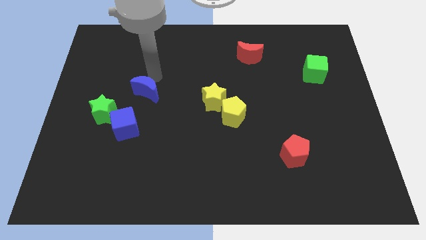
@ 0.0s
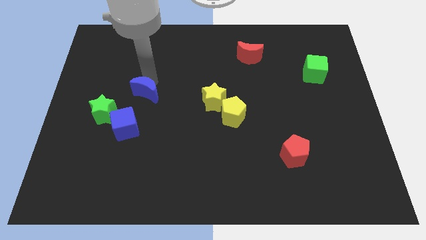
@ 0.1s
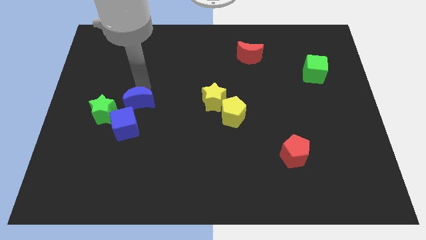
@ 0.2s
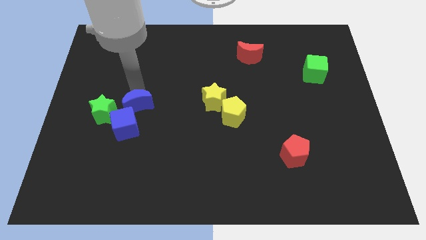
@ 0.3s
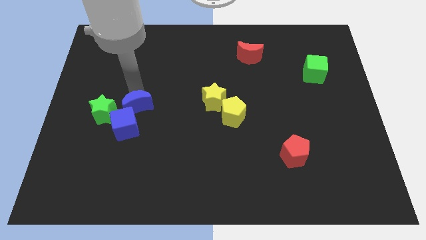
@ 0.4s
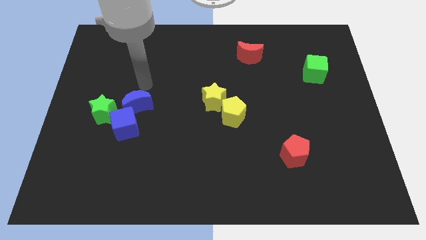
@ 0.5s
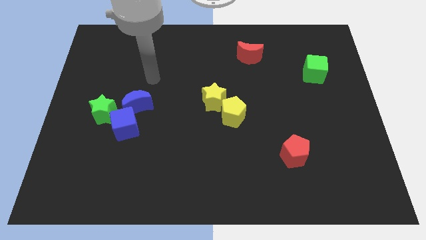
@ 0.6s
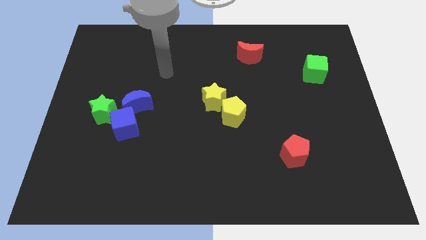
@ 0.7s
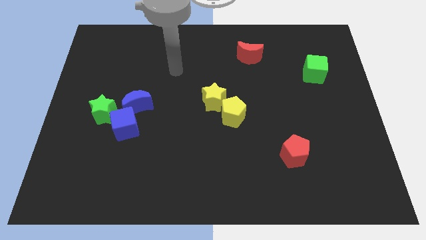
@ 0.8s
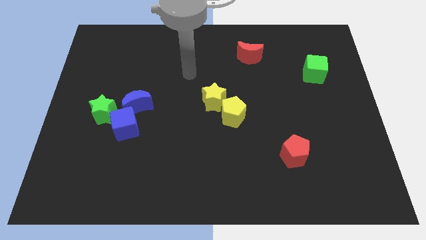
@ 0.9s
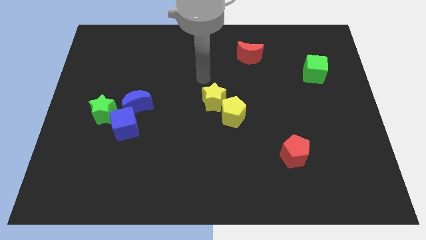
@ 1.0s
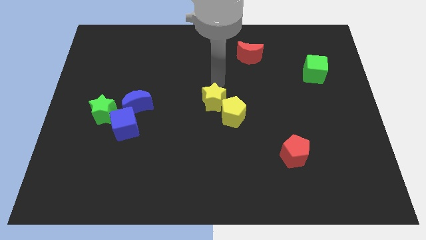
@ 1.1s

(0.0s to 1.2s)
slide the blue moon into the blue cube

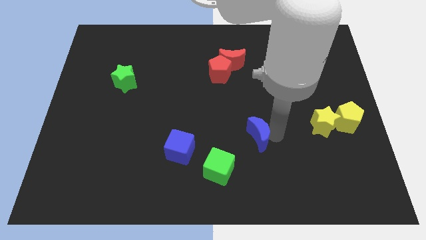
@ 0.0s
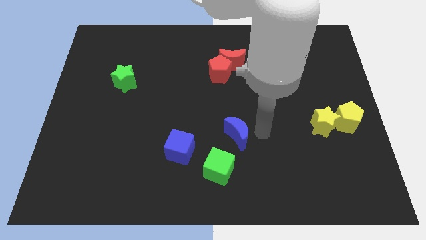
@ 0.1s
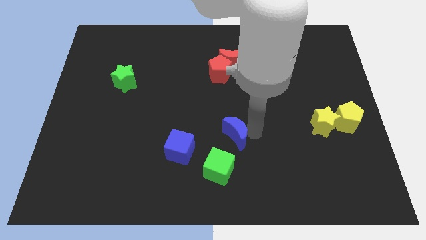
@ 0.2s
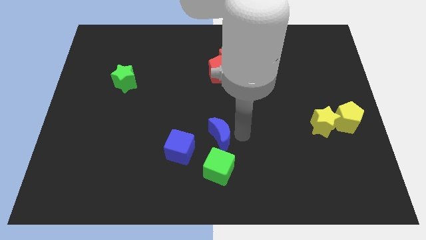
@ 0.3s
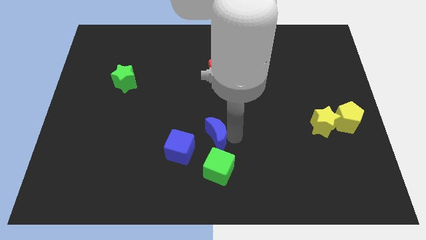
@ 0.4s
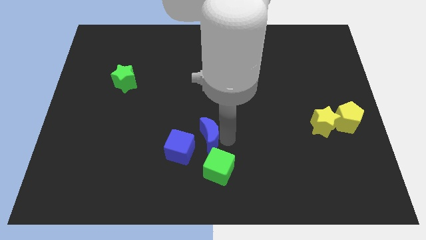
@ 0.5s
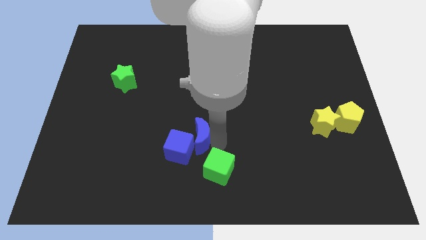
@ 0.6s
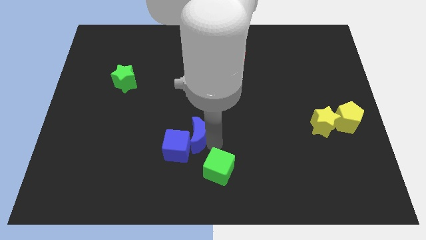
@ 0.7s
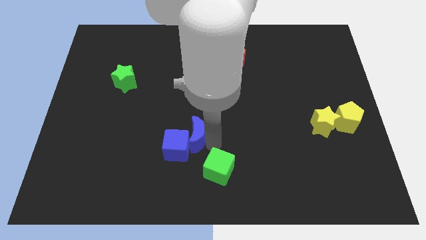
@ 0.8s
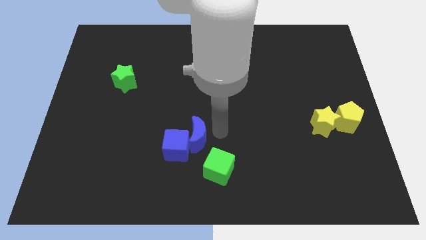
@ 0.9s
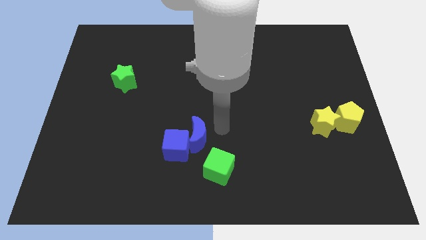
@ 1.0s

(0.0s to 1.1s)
move the blue crescent to the blue cube

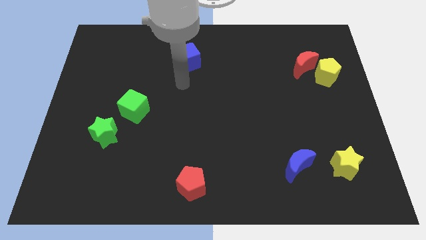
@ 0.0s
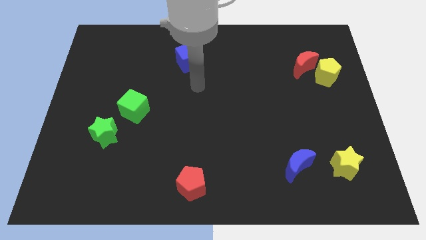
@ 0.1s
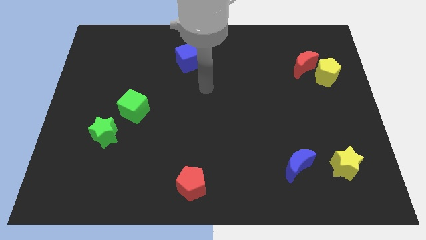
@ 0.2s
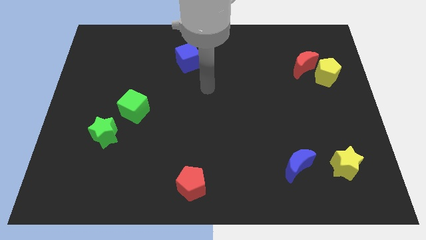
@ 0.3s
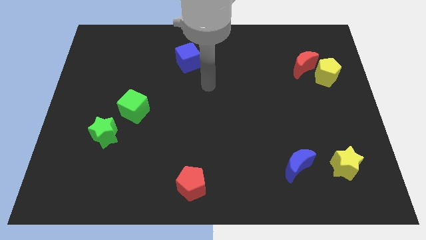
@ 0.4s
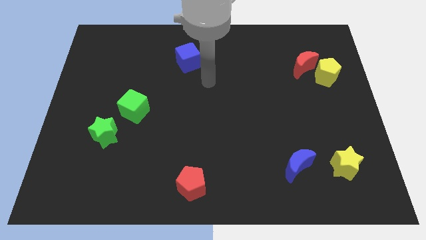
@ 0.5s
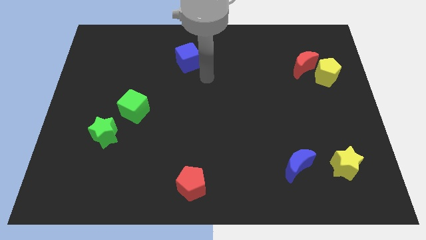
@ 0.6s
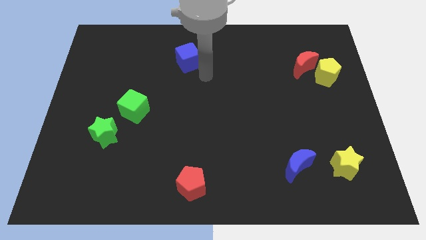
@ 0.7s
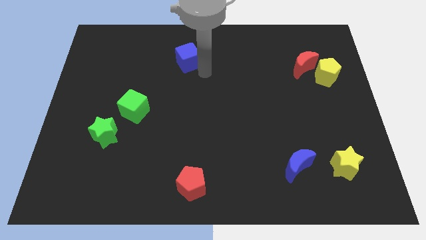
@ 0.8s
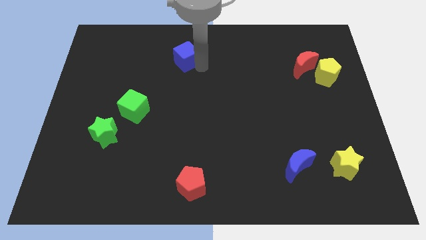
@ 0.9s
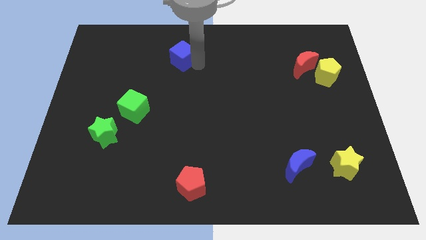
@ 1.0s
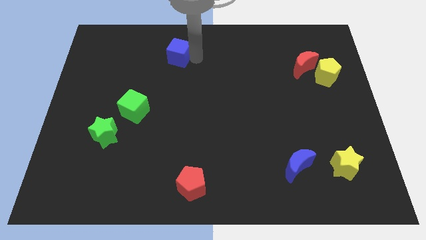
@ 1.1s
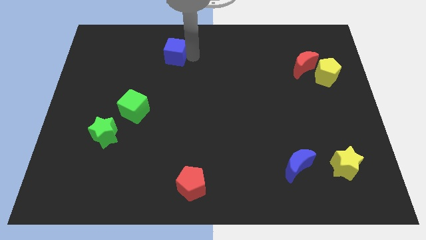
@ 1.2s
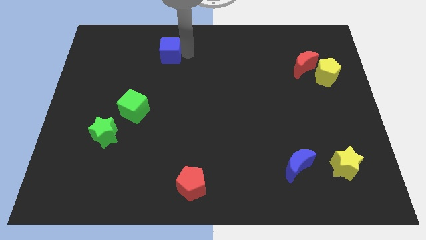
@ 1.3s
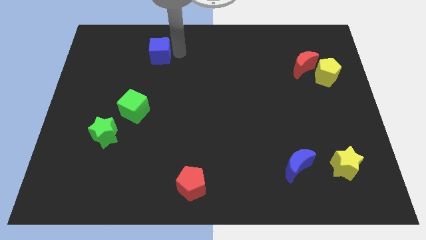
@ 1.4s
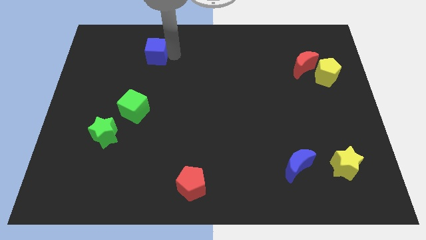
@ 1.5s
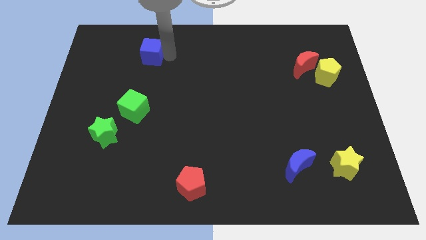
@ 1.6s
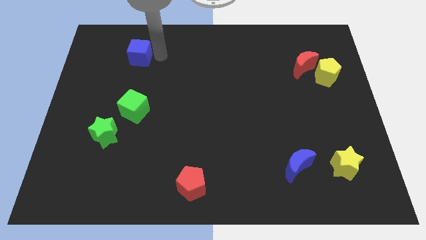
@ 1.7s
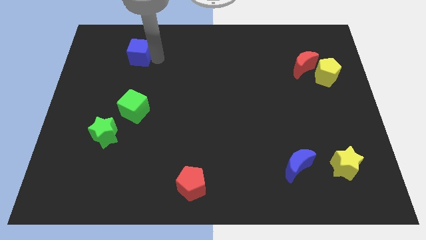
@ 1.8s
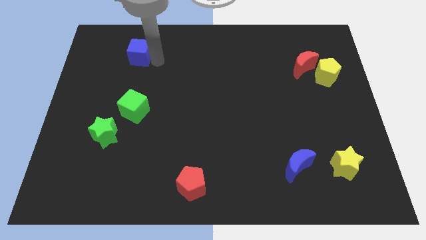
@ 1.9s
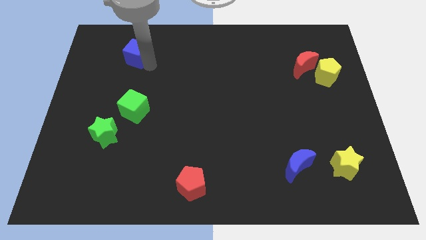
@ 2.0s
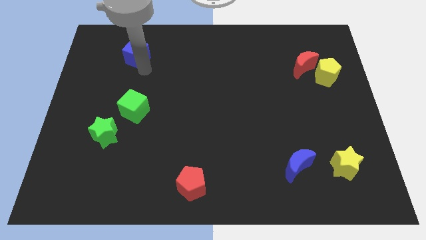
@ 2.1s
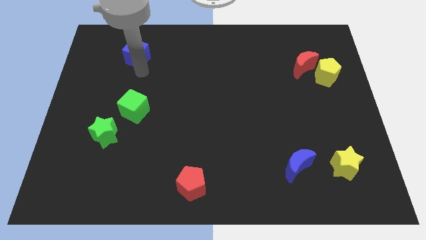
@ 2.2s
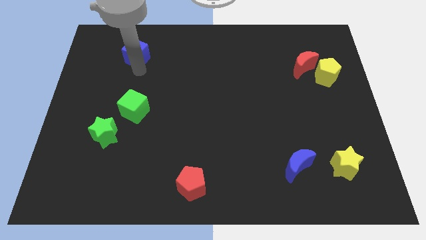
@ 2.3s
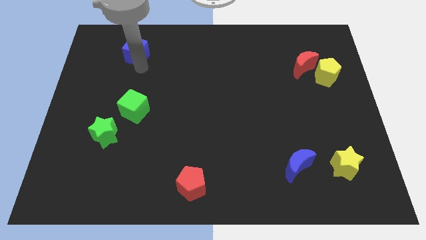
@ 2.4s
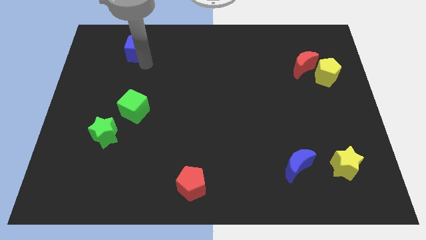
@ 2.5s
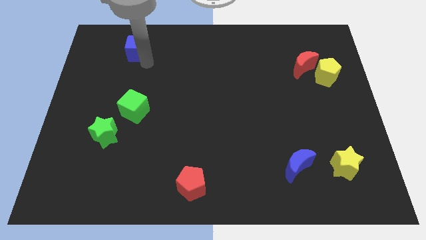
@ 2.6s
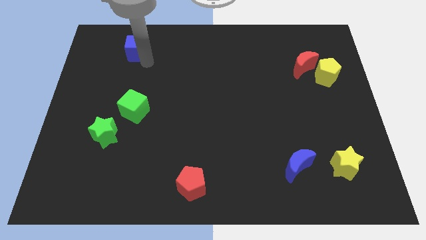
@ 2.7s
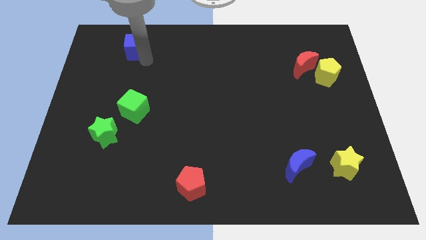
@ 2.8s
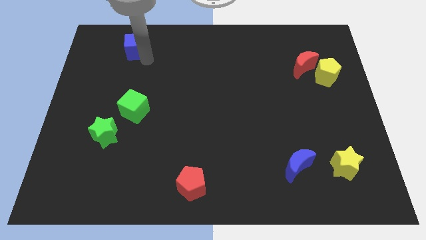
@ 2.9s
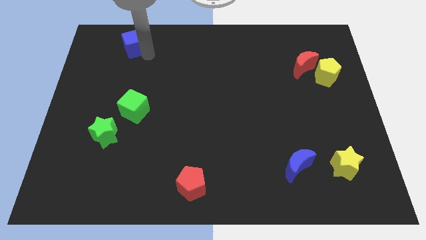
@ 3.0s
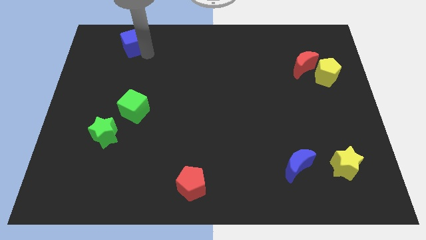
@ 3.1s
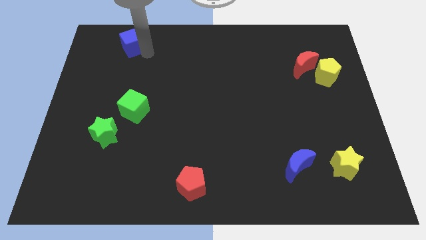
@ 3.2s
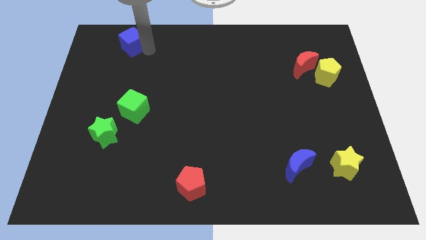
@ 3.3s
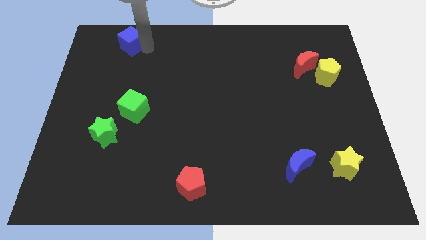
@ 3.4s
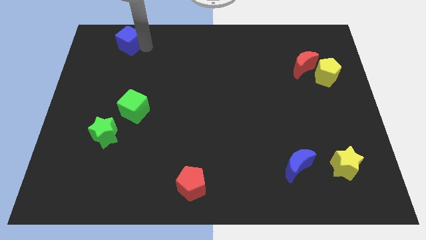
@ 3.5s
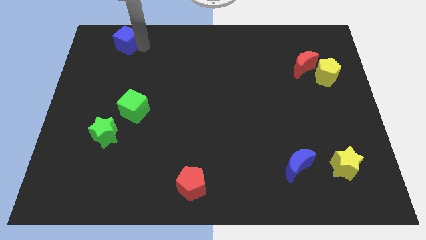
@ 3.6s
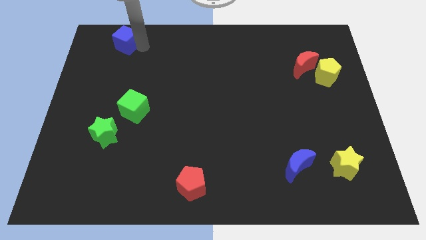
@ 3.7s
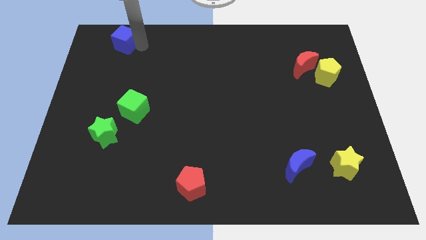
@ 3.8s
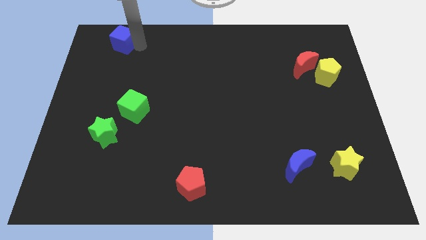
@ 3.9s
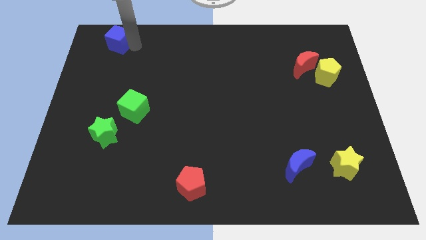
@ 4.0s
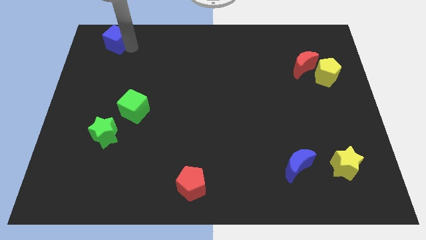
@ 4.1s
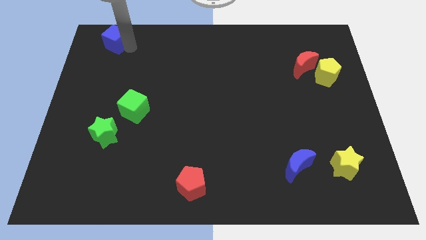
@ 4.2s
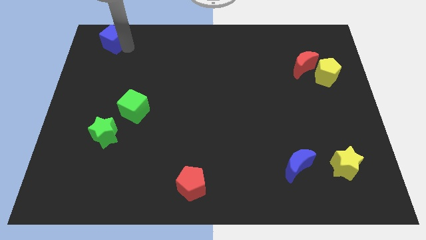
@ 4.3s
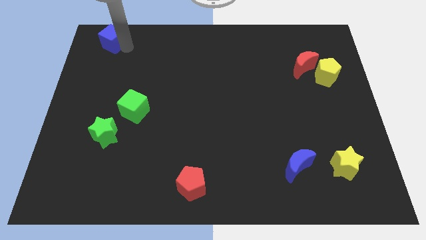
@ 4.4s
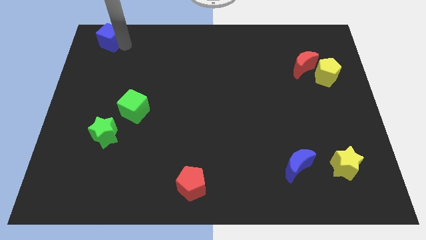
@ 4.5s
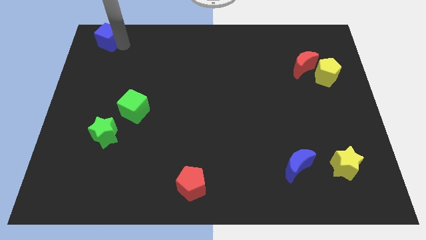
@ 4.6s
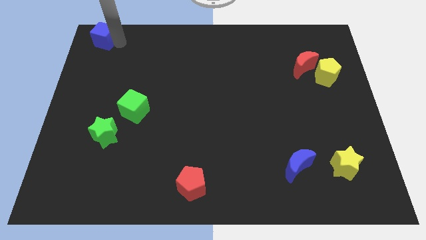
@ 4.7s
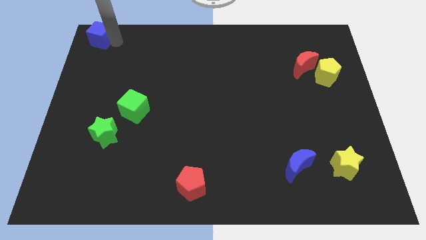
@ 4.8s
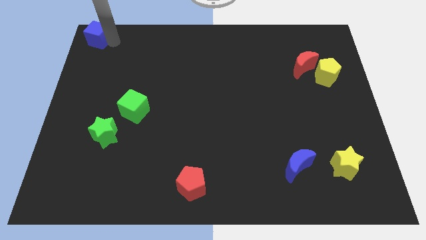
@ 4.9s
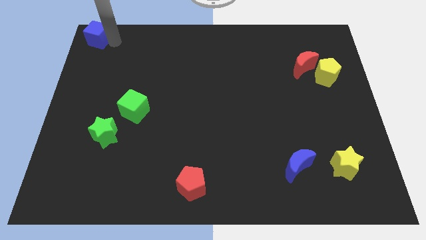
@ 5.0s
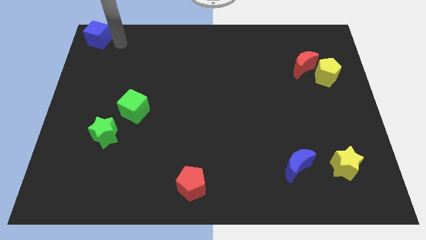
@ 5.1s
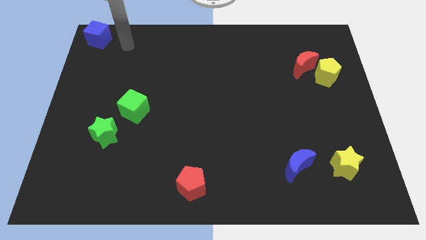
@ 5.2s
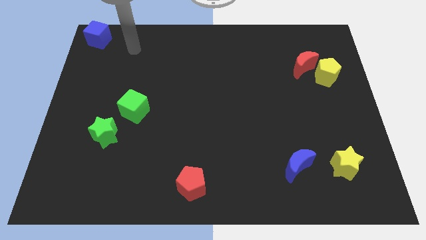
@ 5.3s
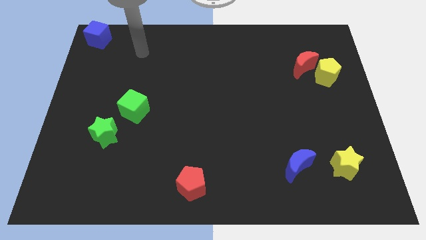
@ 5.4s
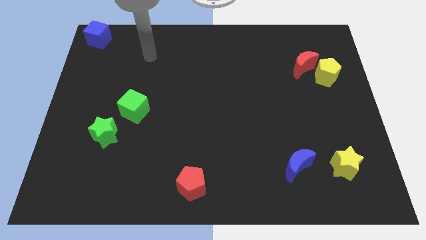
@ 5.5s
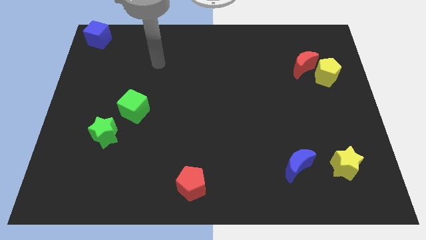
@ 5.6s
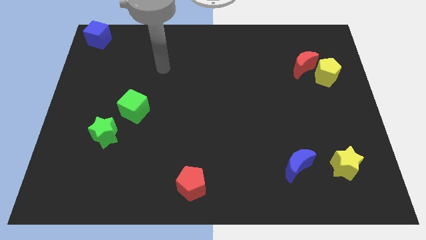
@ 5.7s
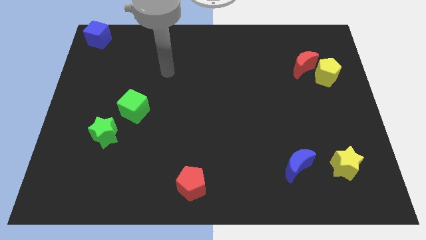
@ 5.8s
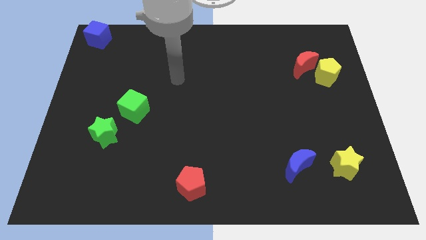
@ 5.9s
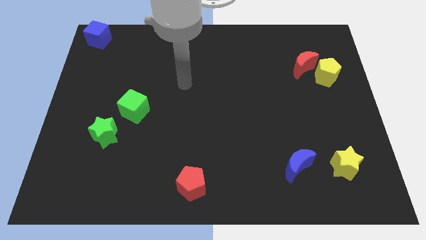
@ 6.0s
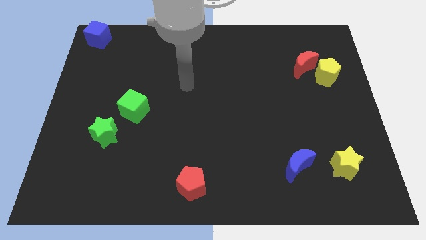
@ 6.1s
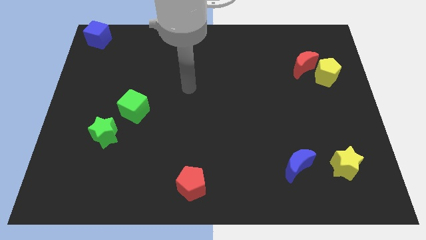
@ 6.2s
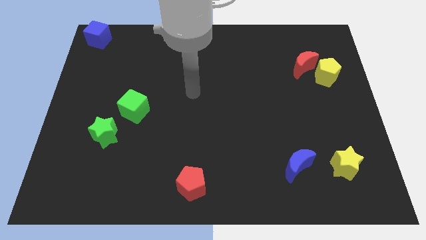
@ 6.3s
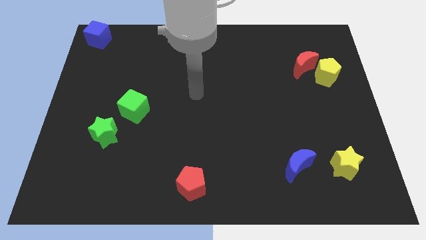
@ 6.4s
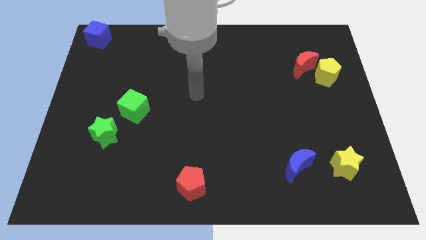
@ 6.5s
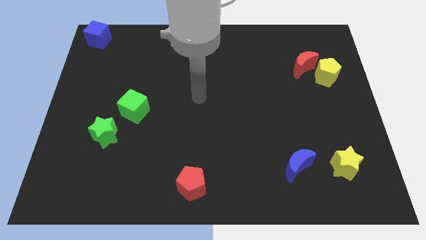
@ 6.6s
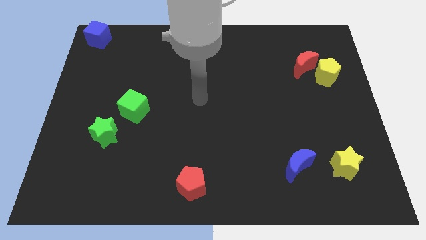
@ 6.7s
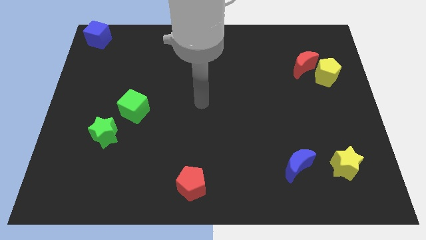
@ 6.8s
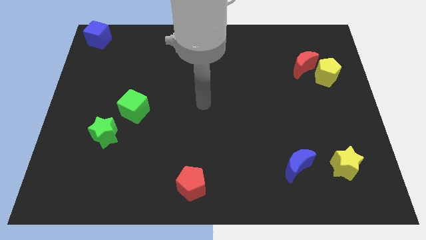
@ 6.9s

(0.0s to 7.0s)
place the blue cube at the top left corner of the board
